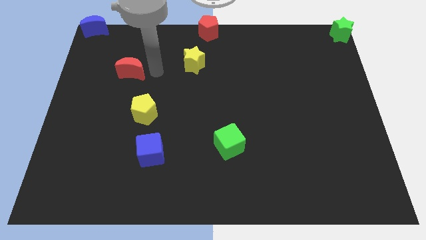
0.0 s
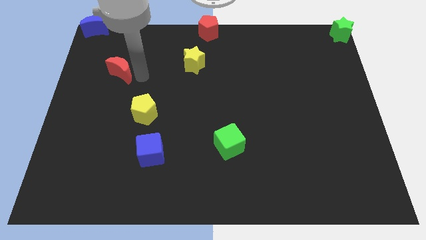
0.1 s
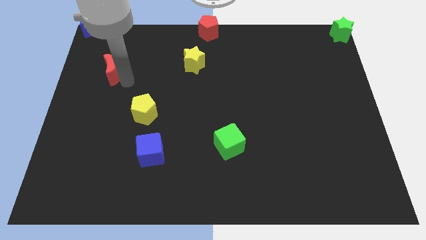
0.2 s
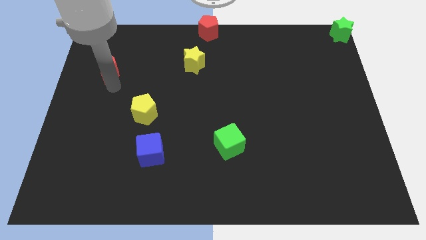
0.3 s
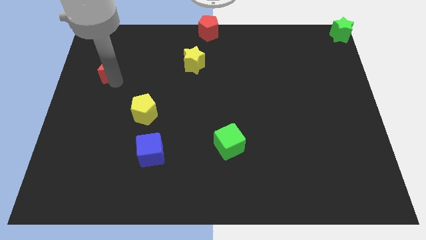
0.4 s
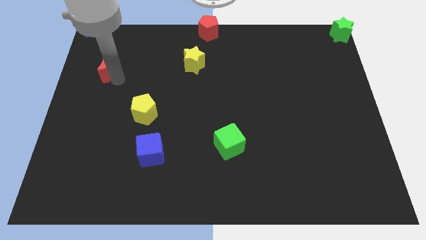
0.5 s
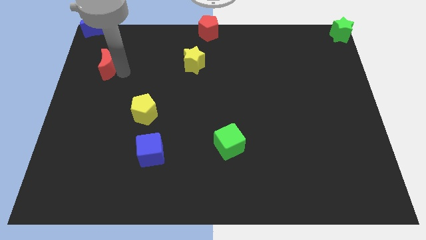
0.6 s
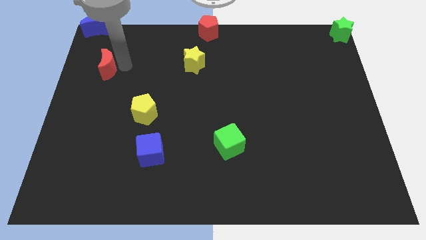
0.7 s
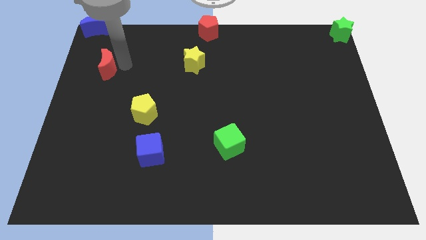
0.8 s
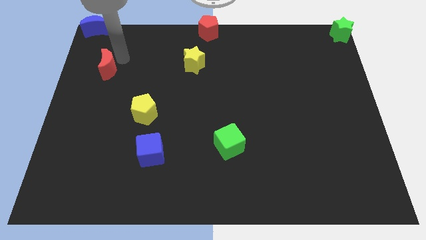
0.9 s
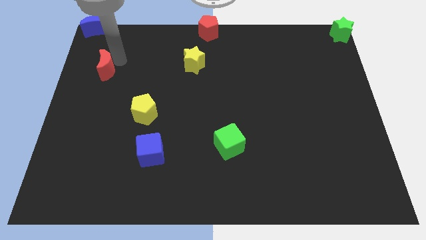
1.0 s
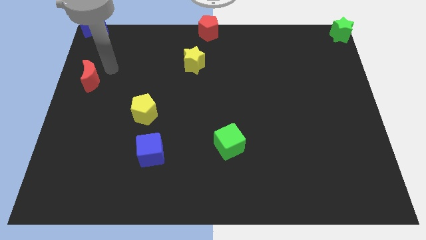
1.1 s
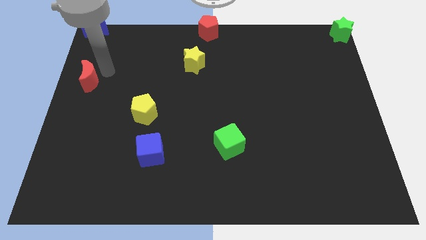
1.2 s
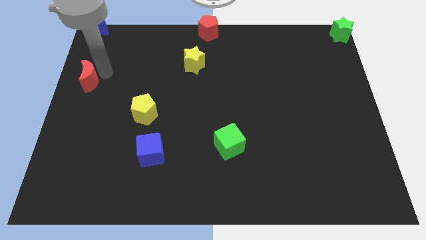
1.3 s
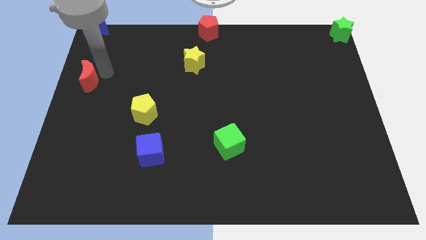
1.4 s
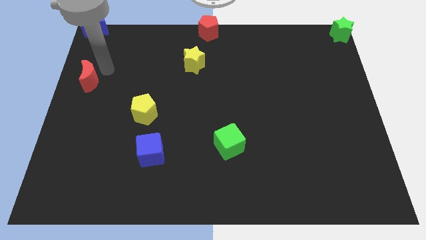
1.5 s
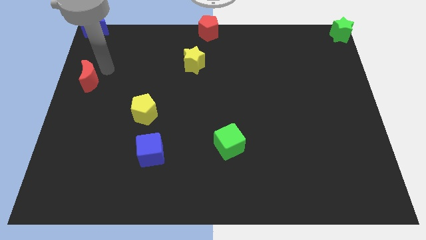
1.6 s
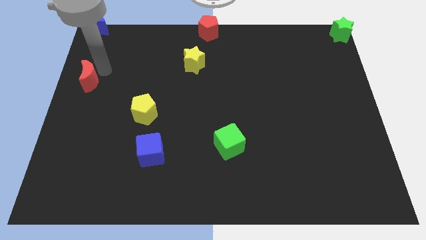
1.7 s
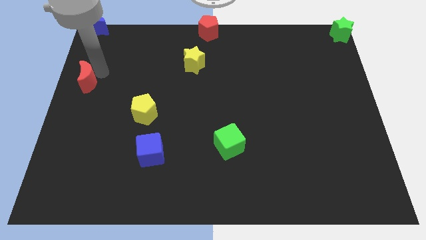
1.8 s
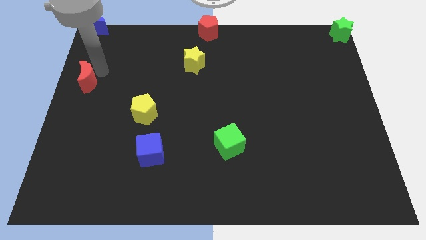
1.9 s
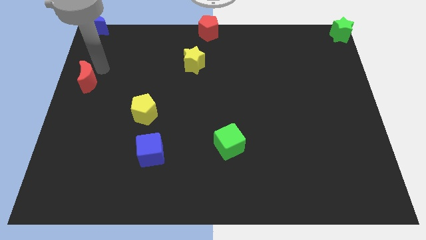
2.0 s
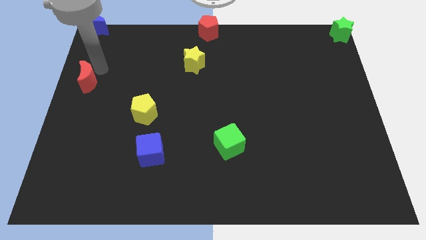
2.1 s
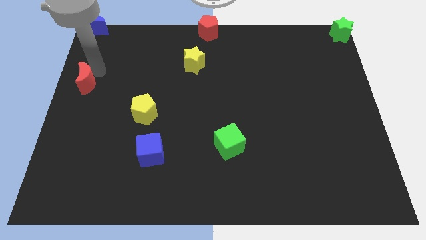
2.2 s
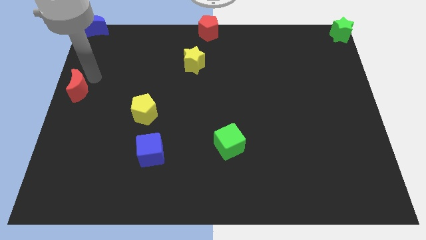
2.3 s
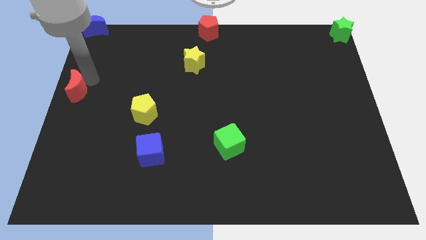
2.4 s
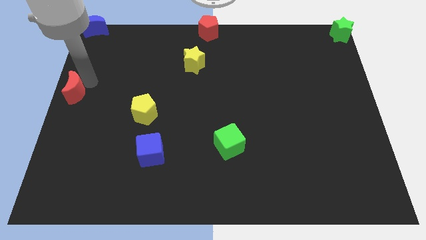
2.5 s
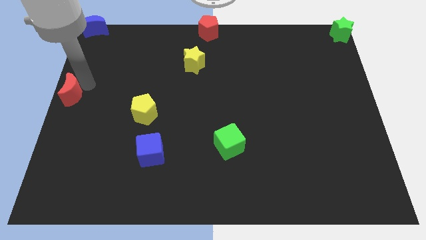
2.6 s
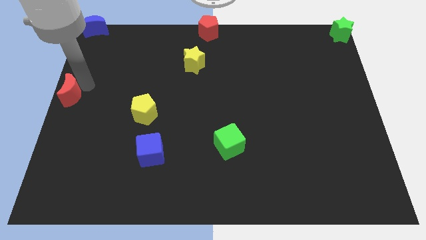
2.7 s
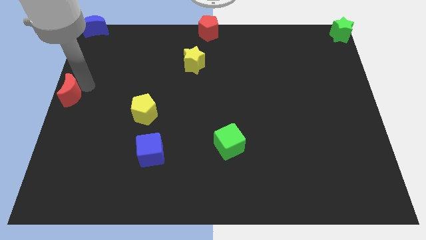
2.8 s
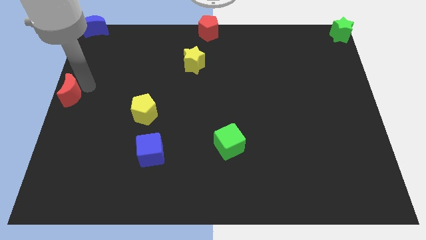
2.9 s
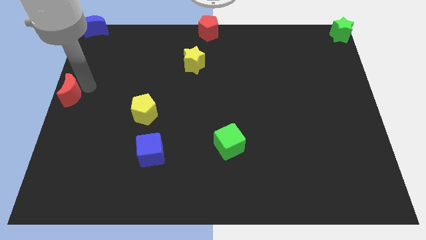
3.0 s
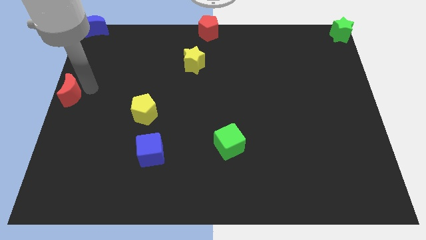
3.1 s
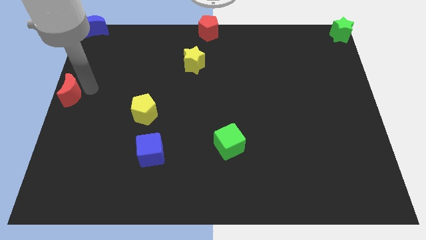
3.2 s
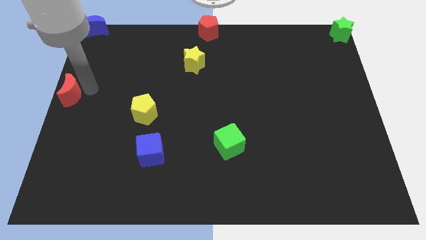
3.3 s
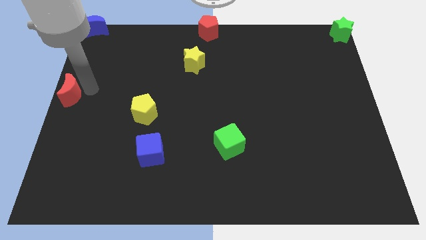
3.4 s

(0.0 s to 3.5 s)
place the red moon below the blue moon

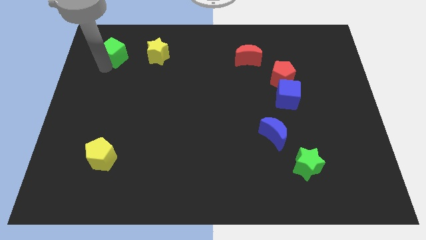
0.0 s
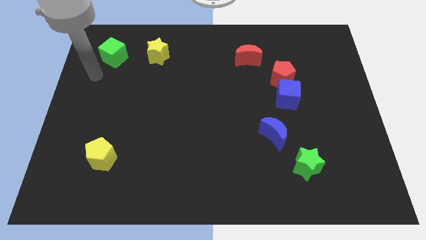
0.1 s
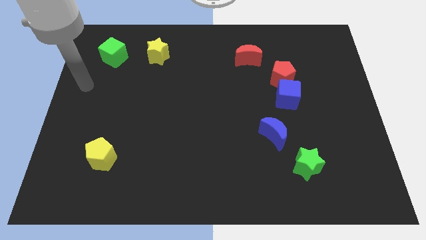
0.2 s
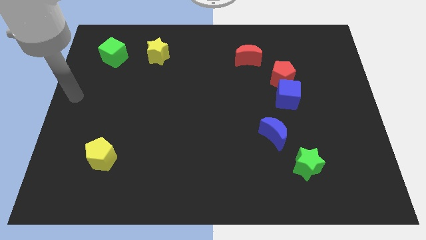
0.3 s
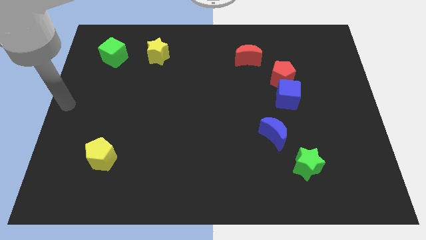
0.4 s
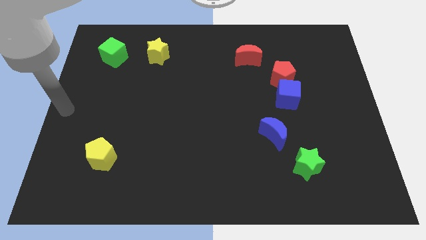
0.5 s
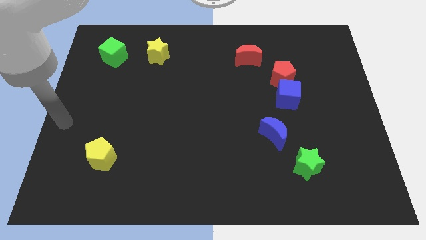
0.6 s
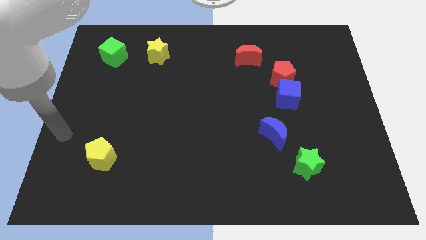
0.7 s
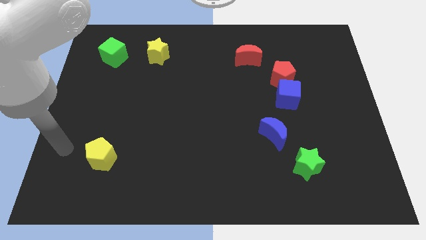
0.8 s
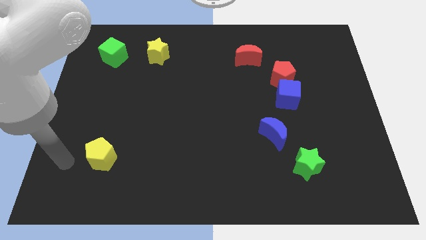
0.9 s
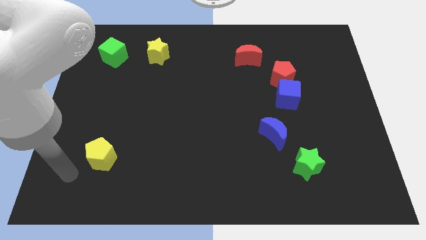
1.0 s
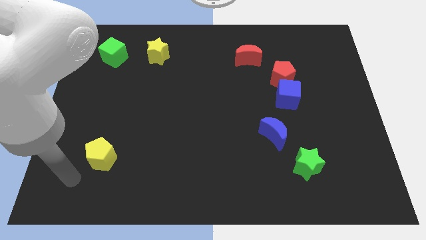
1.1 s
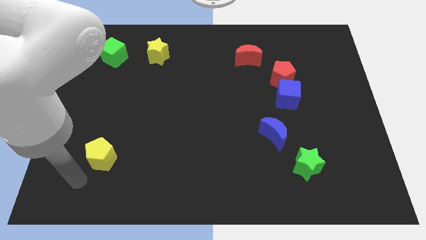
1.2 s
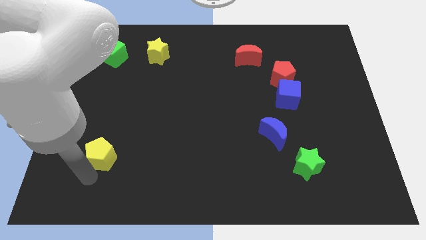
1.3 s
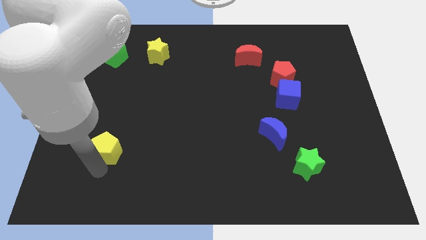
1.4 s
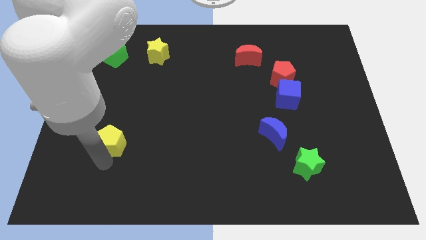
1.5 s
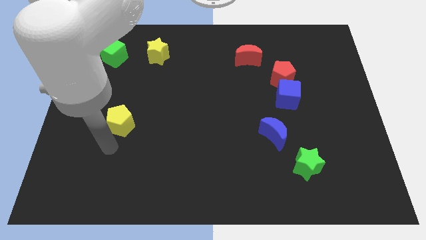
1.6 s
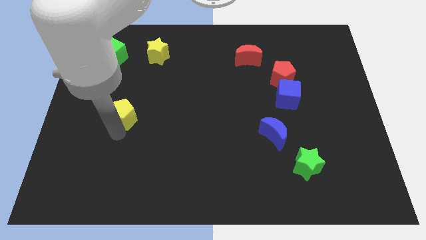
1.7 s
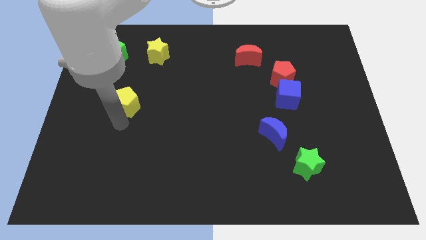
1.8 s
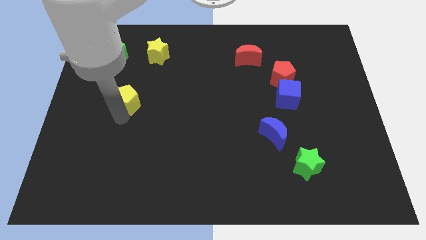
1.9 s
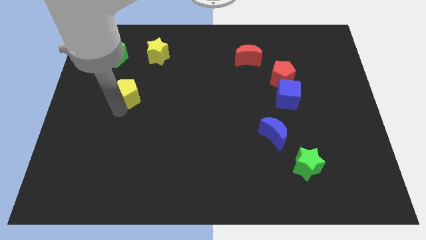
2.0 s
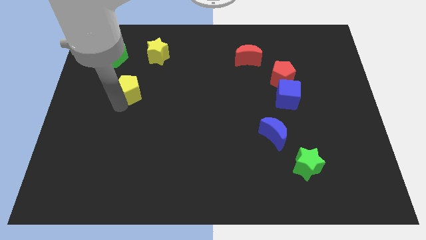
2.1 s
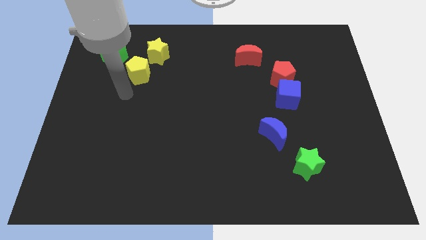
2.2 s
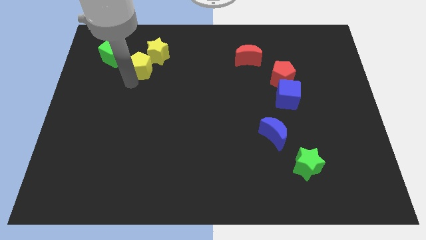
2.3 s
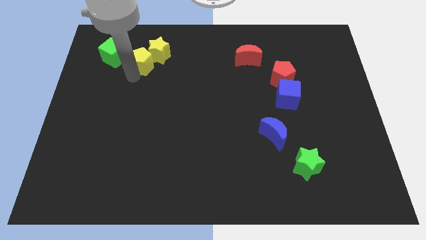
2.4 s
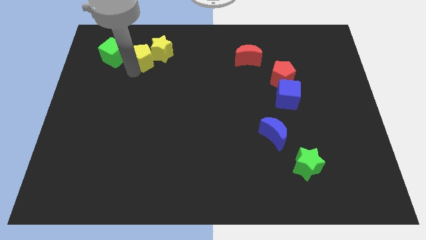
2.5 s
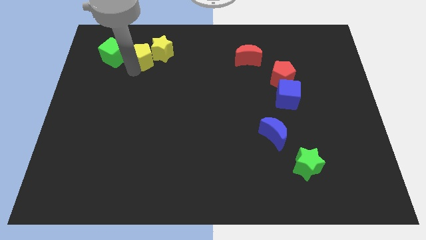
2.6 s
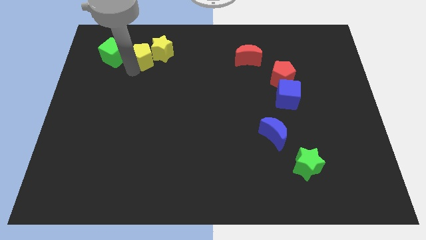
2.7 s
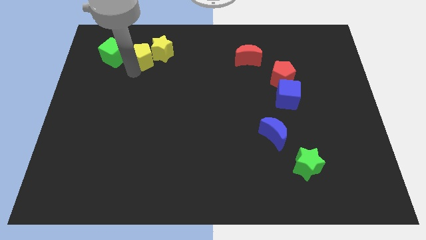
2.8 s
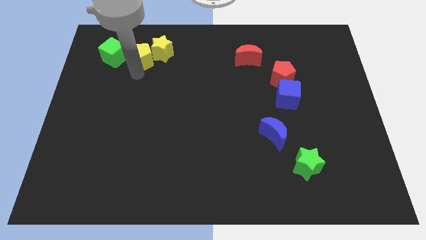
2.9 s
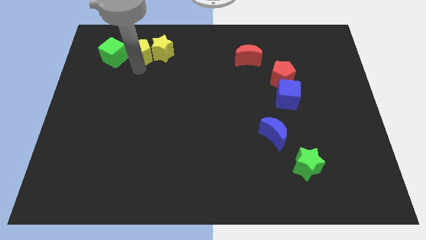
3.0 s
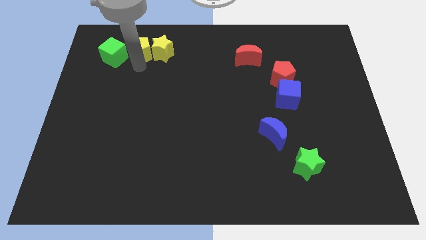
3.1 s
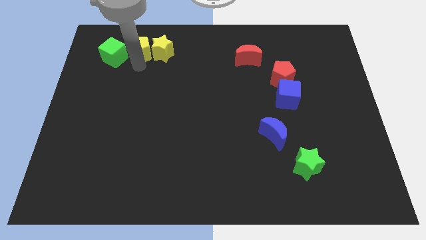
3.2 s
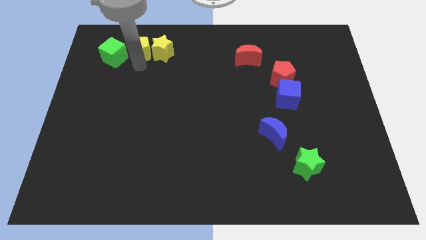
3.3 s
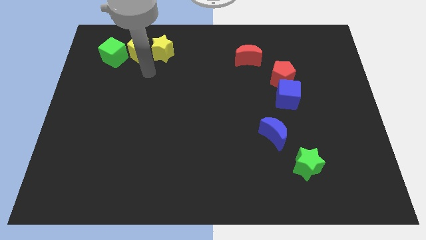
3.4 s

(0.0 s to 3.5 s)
place the yellow pentagon in between the yellow star and green cube

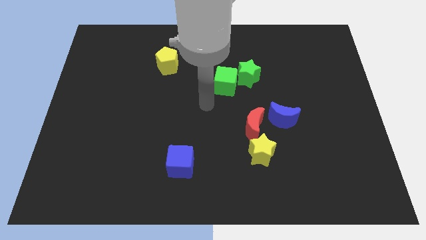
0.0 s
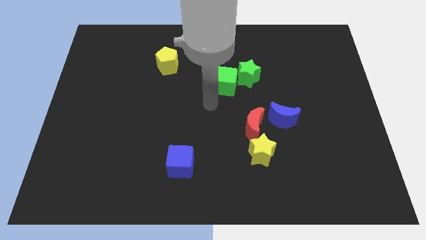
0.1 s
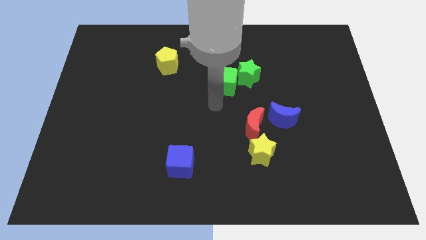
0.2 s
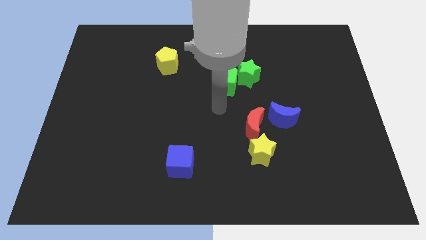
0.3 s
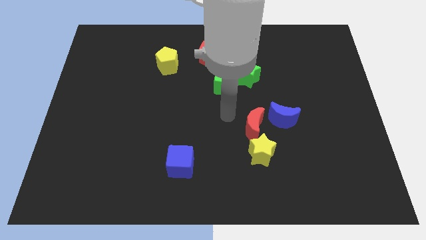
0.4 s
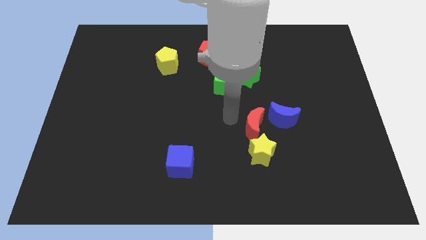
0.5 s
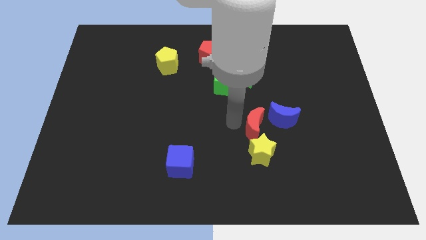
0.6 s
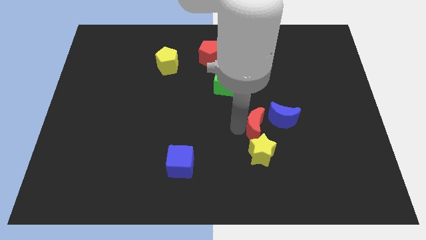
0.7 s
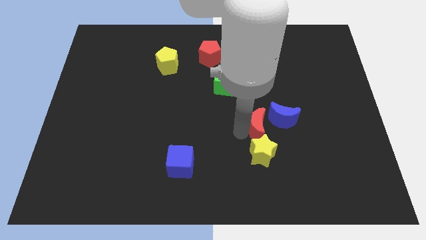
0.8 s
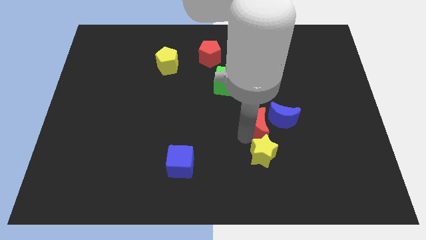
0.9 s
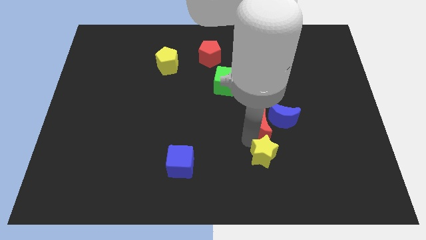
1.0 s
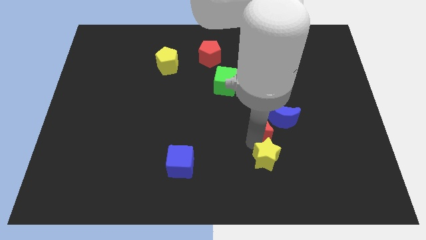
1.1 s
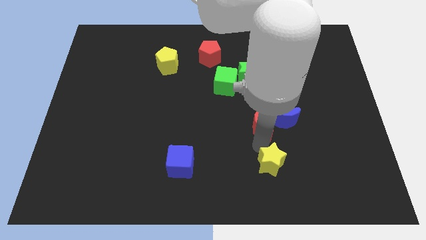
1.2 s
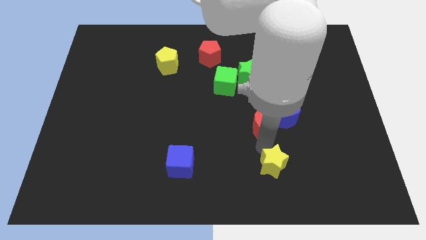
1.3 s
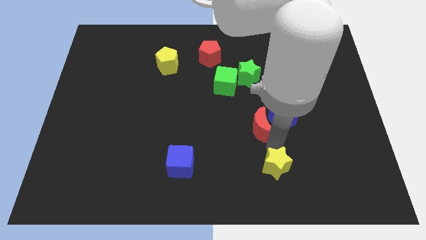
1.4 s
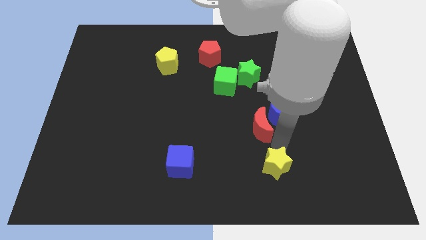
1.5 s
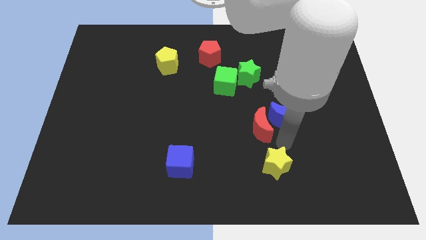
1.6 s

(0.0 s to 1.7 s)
separate yellow star from the red moon

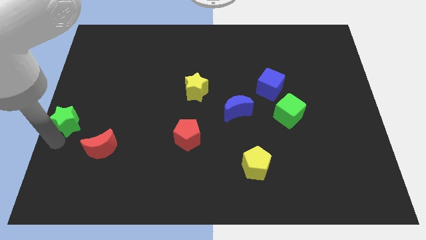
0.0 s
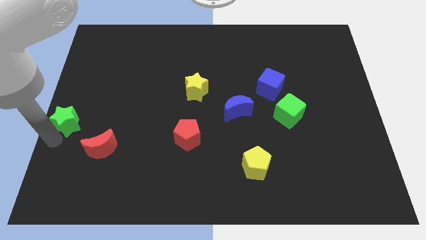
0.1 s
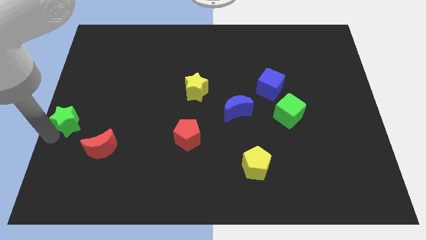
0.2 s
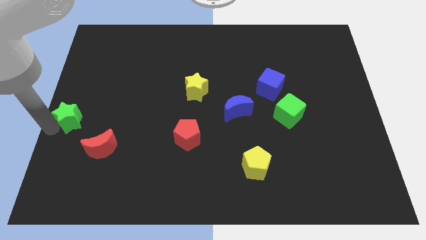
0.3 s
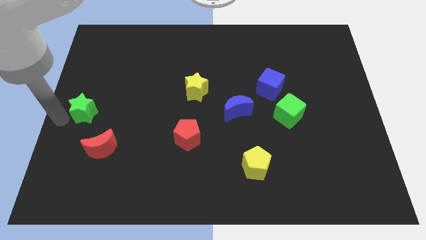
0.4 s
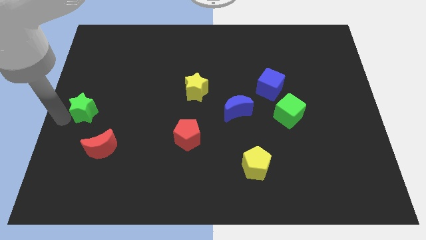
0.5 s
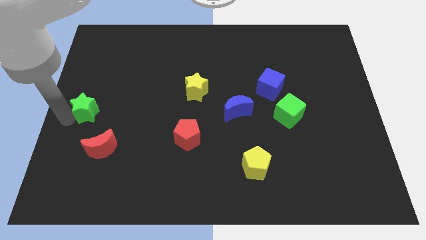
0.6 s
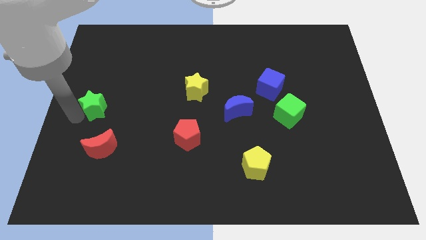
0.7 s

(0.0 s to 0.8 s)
push the green star parallel left of blue moon
